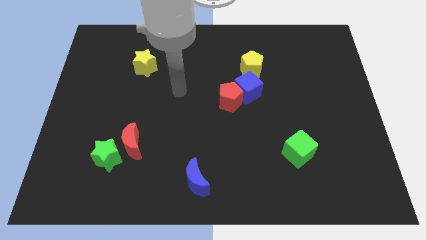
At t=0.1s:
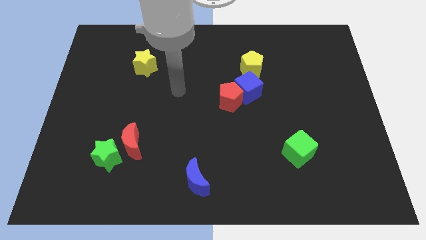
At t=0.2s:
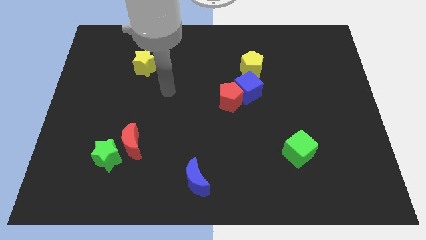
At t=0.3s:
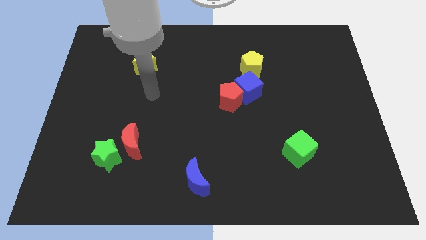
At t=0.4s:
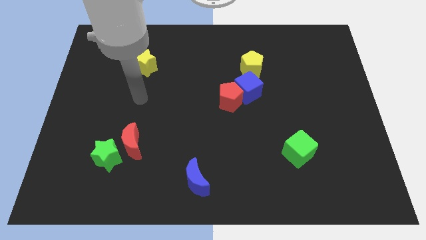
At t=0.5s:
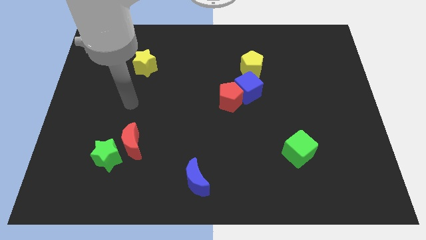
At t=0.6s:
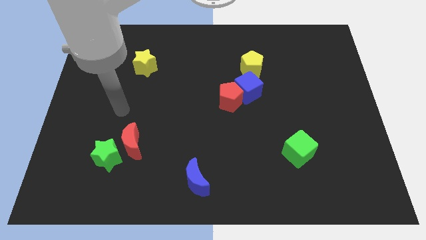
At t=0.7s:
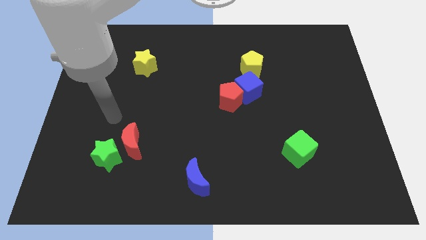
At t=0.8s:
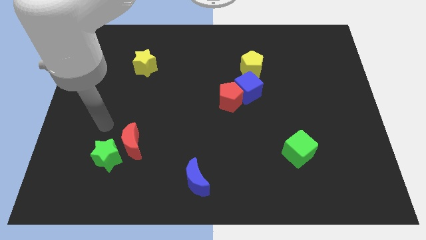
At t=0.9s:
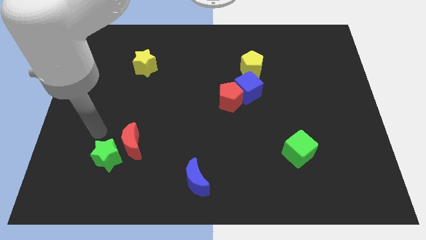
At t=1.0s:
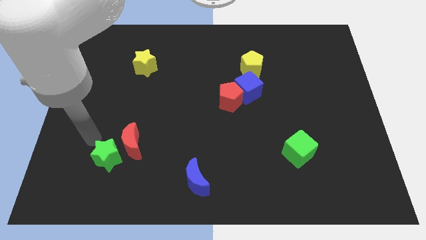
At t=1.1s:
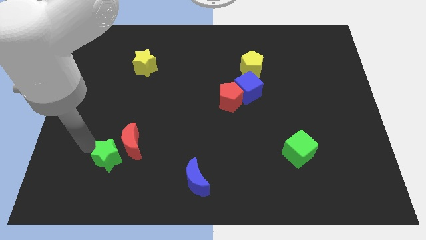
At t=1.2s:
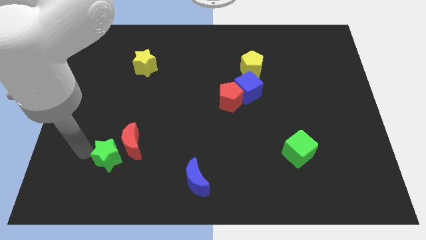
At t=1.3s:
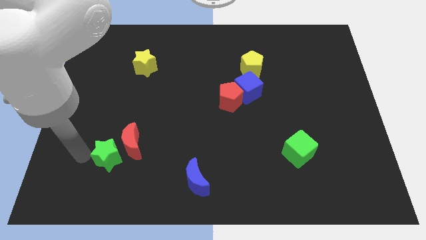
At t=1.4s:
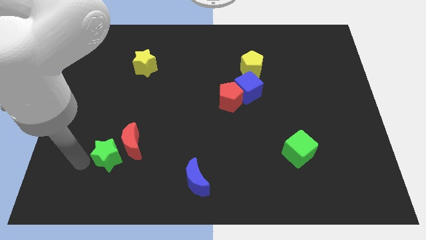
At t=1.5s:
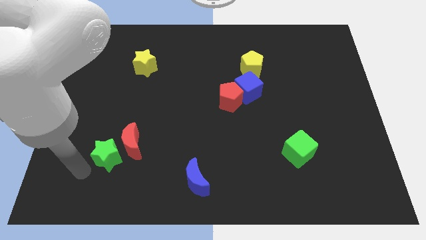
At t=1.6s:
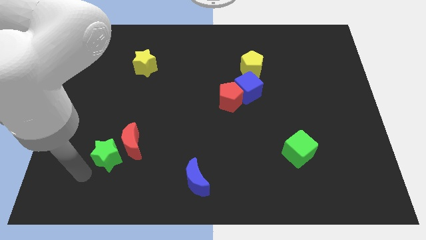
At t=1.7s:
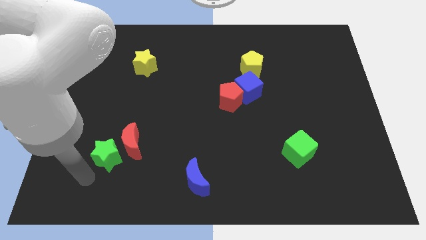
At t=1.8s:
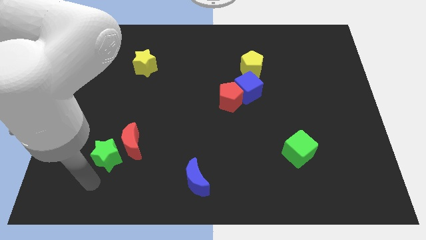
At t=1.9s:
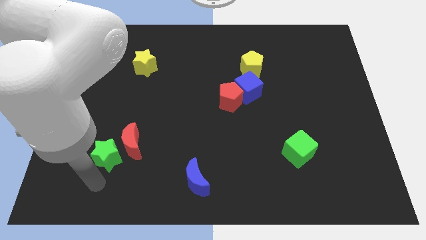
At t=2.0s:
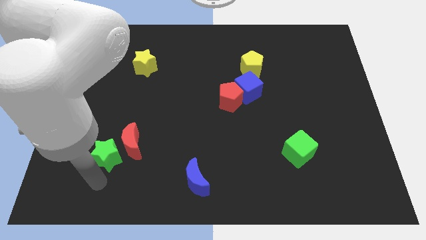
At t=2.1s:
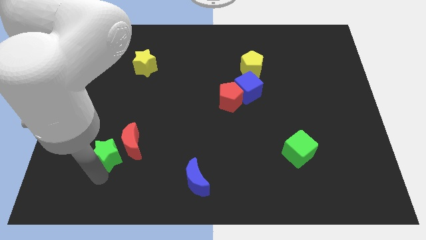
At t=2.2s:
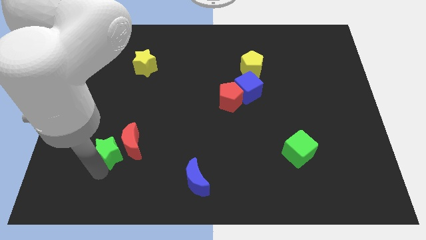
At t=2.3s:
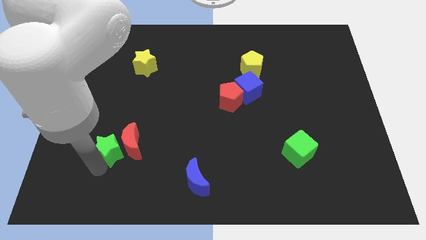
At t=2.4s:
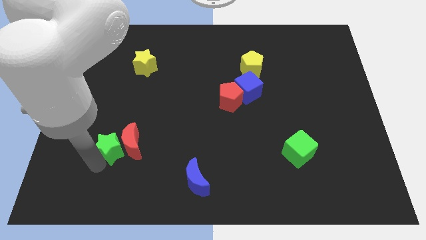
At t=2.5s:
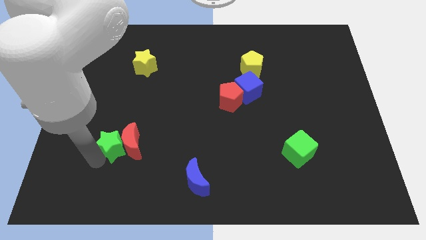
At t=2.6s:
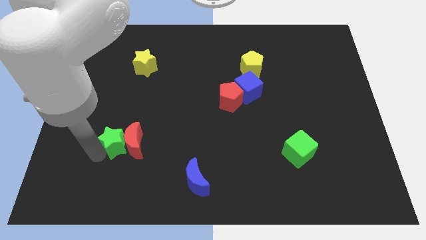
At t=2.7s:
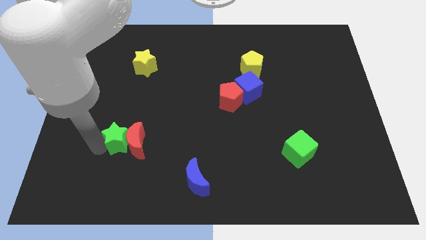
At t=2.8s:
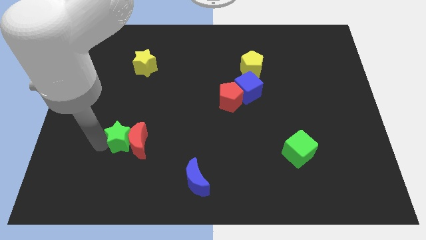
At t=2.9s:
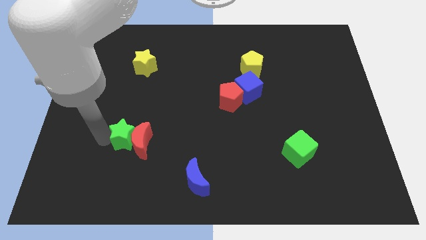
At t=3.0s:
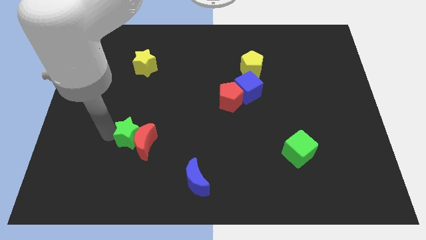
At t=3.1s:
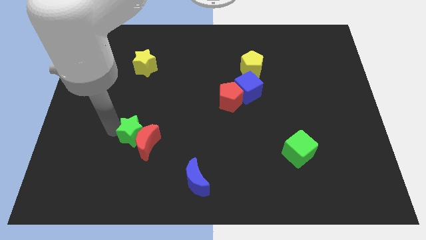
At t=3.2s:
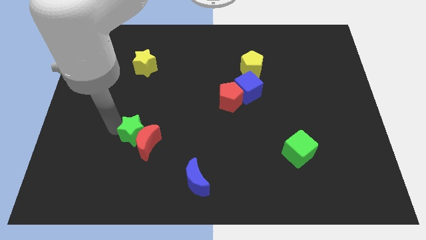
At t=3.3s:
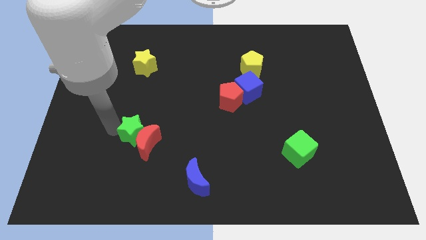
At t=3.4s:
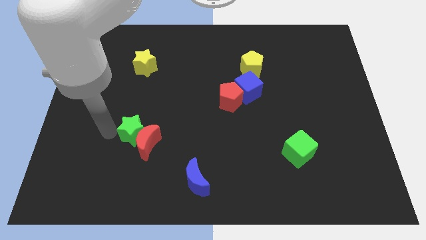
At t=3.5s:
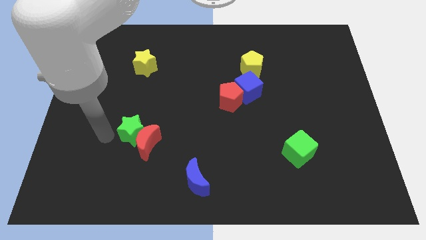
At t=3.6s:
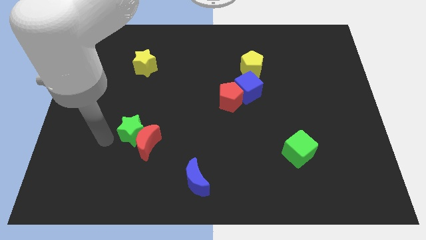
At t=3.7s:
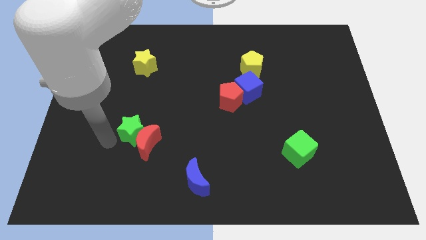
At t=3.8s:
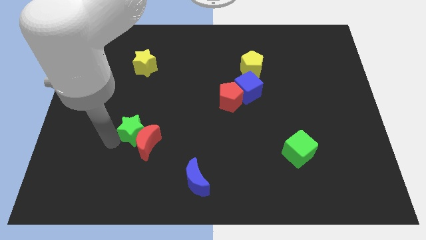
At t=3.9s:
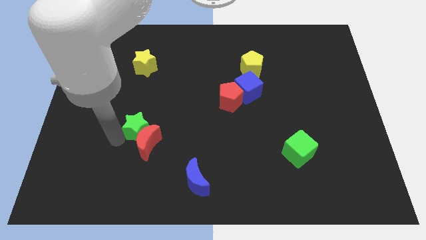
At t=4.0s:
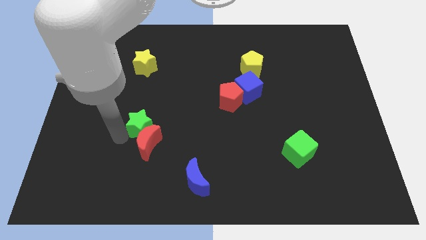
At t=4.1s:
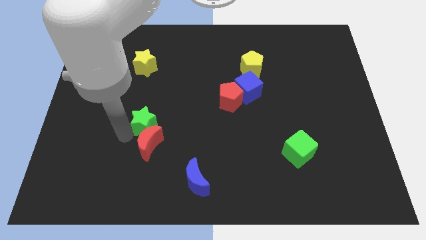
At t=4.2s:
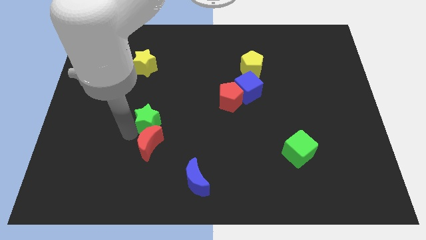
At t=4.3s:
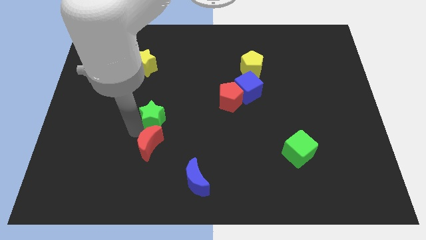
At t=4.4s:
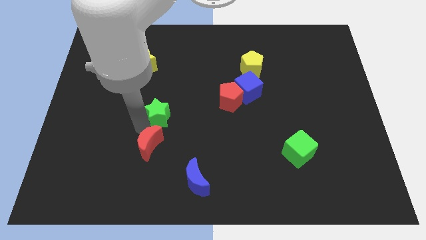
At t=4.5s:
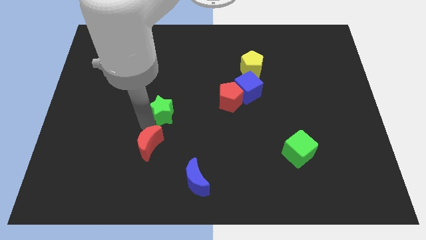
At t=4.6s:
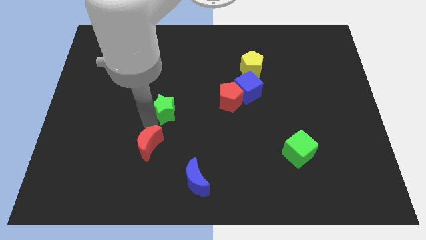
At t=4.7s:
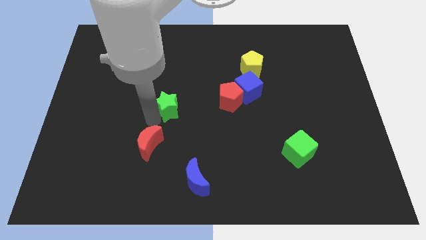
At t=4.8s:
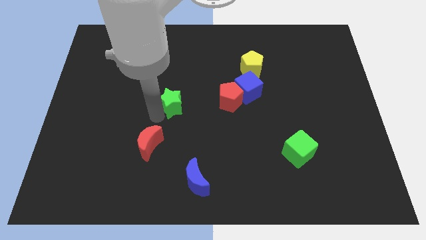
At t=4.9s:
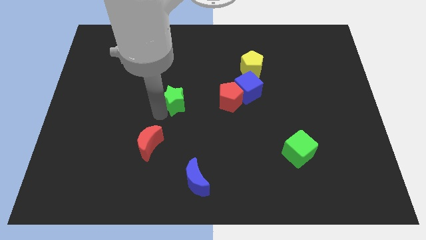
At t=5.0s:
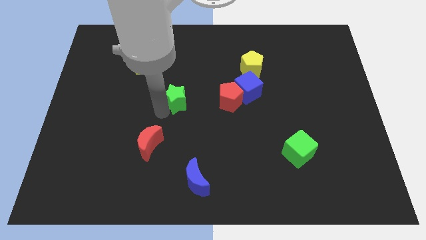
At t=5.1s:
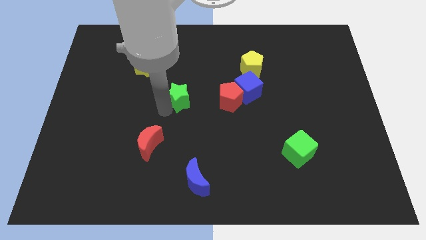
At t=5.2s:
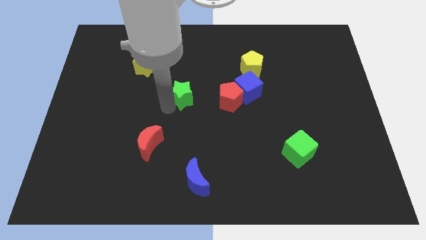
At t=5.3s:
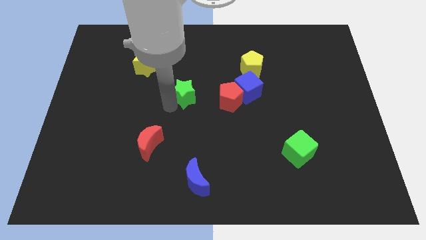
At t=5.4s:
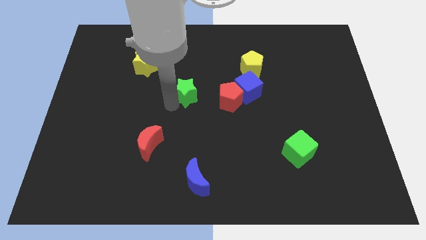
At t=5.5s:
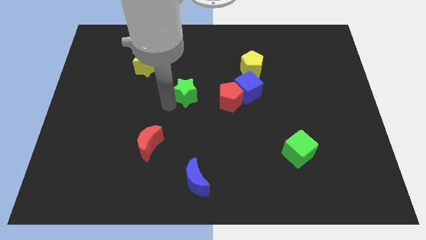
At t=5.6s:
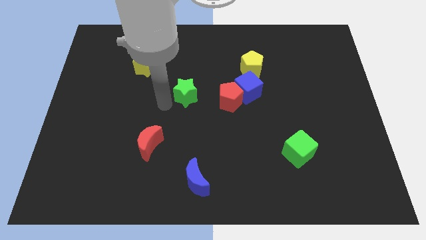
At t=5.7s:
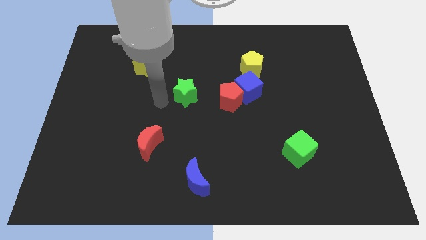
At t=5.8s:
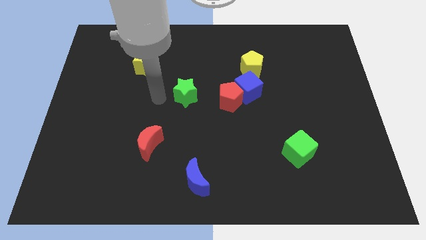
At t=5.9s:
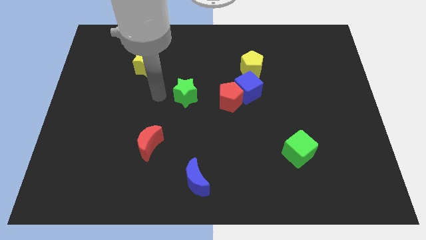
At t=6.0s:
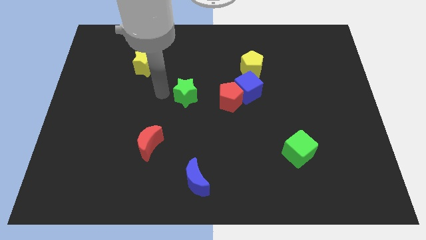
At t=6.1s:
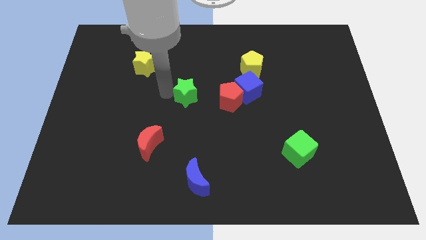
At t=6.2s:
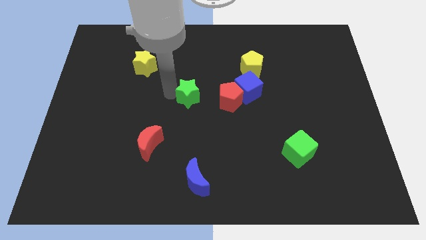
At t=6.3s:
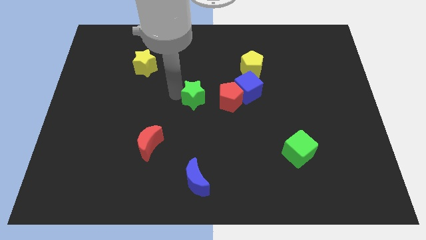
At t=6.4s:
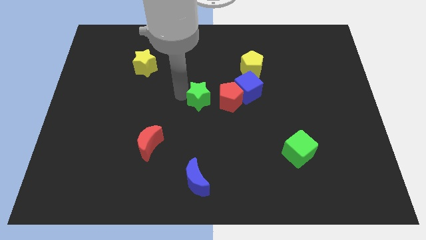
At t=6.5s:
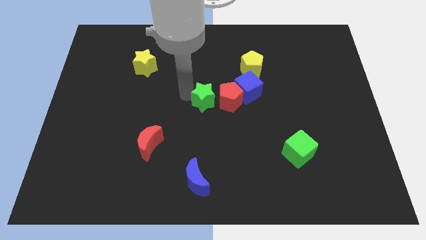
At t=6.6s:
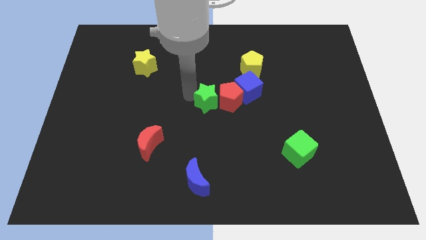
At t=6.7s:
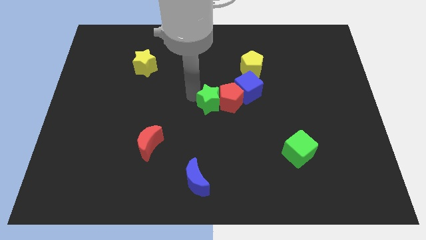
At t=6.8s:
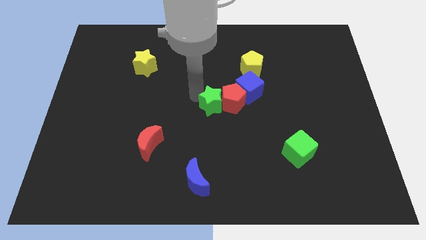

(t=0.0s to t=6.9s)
put the green star close to the red pentagon

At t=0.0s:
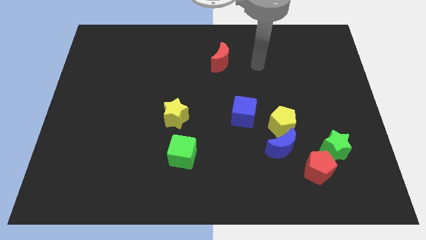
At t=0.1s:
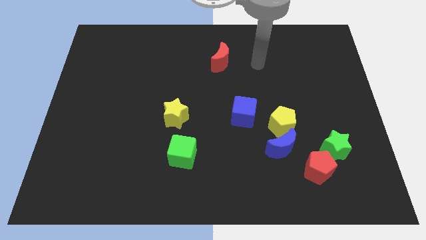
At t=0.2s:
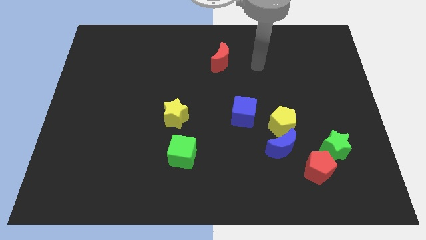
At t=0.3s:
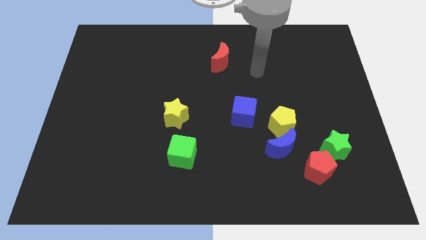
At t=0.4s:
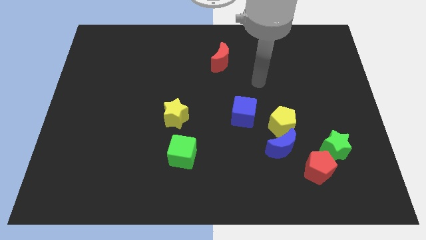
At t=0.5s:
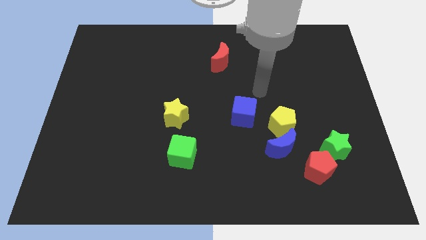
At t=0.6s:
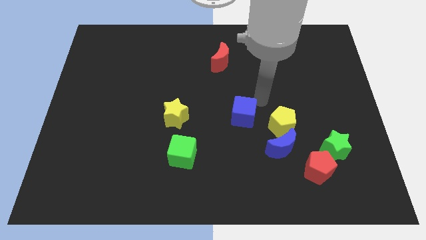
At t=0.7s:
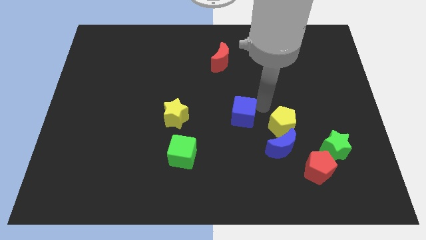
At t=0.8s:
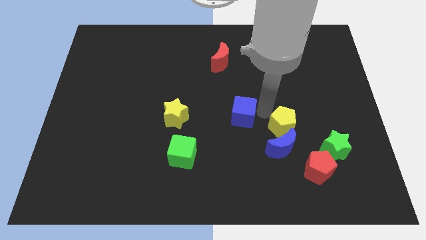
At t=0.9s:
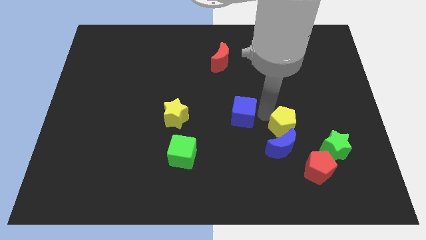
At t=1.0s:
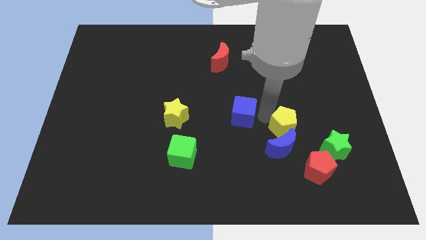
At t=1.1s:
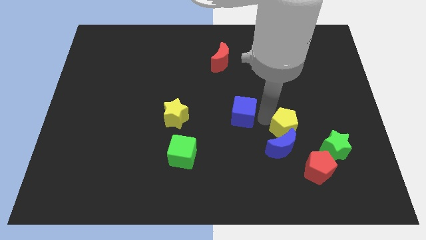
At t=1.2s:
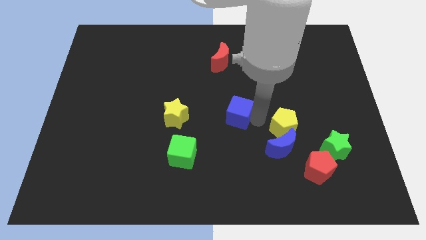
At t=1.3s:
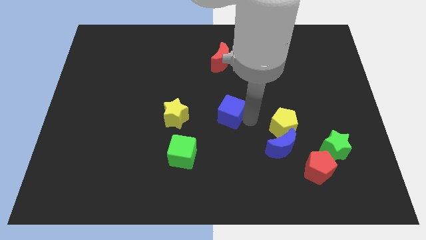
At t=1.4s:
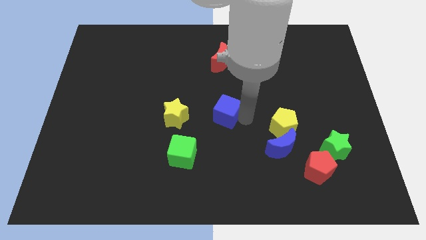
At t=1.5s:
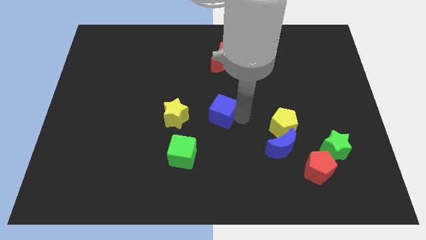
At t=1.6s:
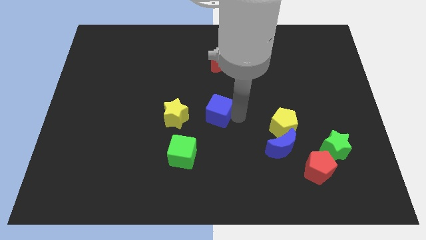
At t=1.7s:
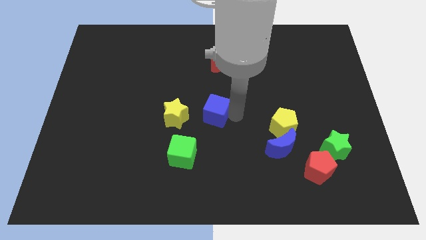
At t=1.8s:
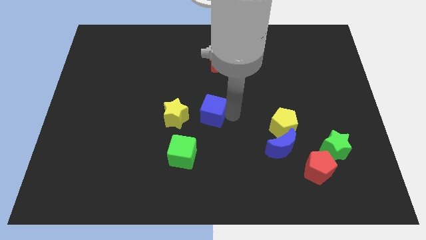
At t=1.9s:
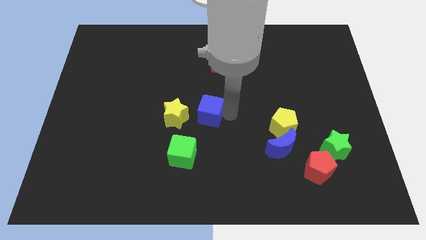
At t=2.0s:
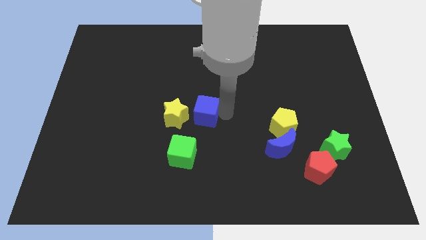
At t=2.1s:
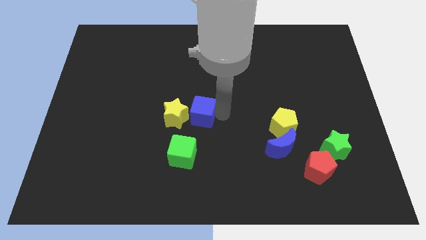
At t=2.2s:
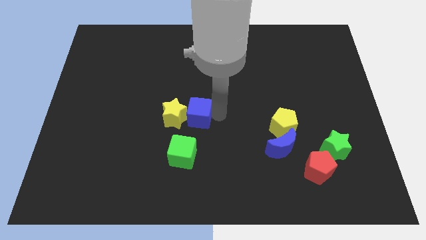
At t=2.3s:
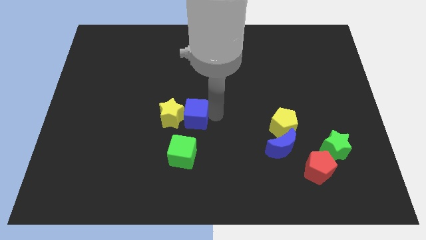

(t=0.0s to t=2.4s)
push the blue cube close to the yellow star
